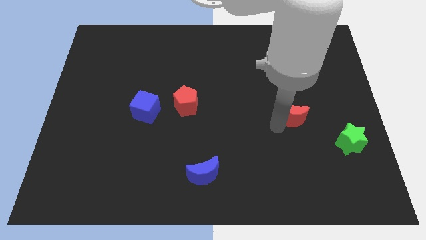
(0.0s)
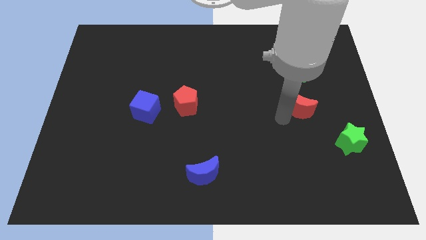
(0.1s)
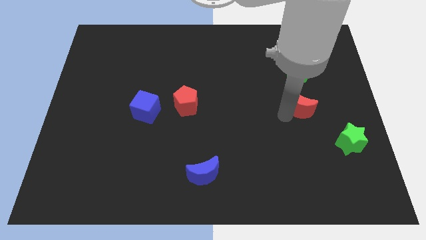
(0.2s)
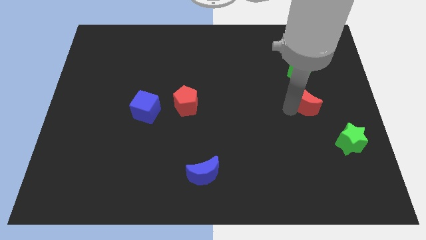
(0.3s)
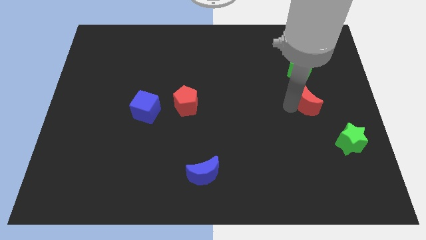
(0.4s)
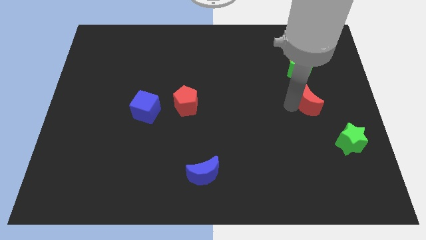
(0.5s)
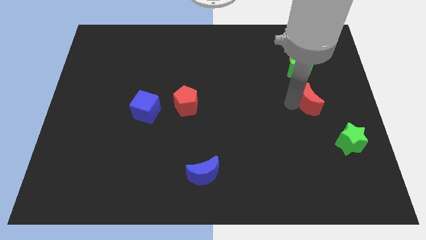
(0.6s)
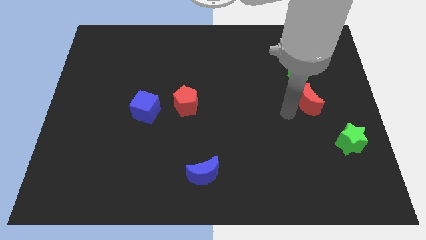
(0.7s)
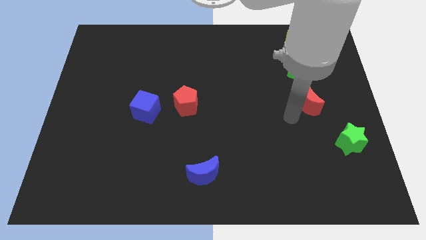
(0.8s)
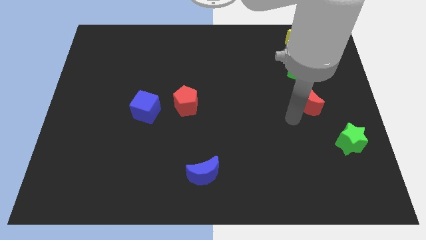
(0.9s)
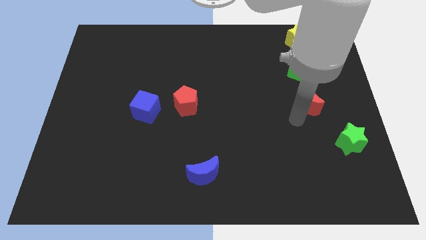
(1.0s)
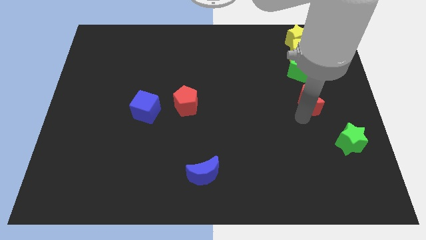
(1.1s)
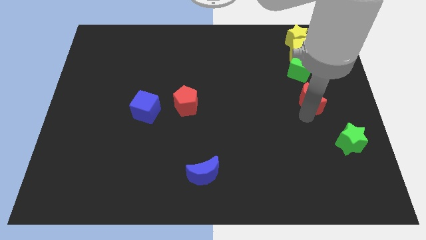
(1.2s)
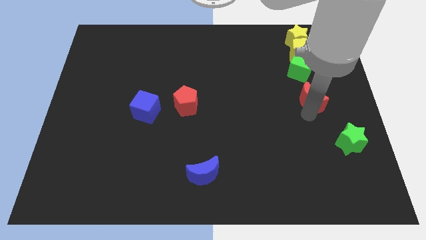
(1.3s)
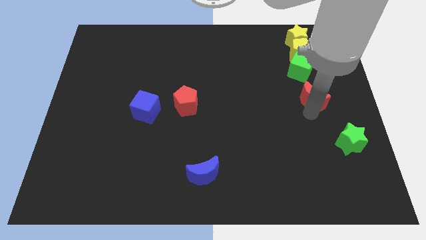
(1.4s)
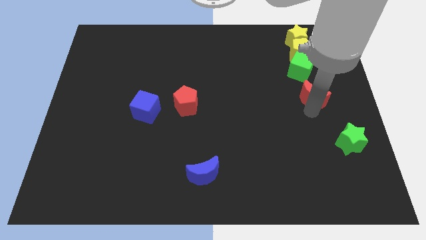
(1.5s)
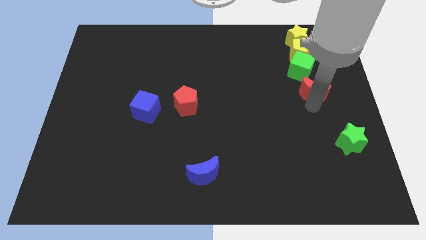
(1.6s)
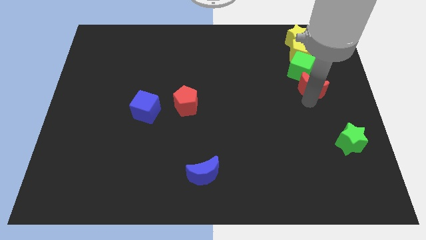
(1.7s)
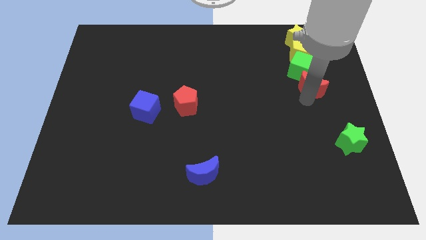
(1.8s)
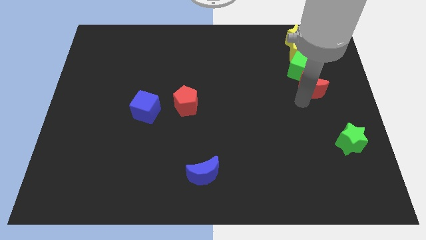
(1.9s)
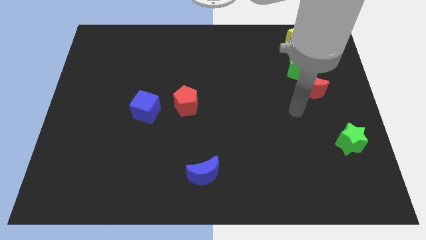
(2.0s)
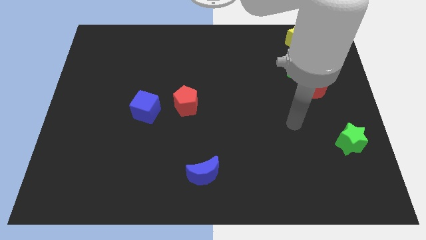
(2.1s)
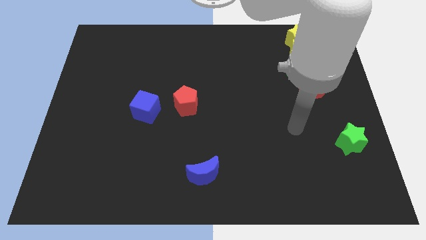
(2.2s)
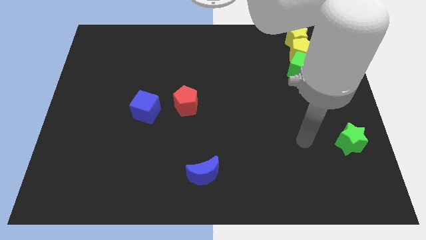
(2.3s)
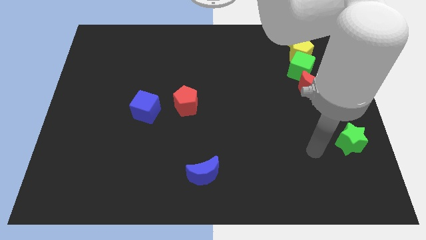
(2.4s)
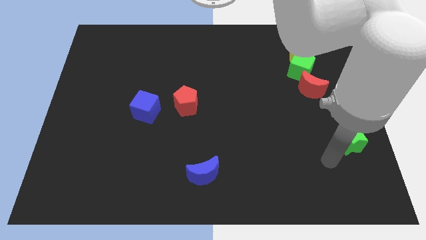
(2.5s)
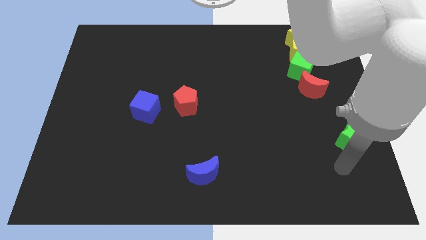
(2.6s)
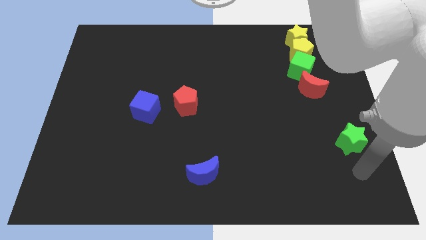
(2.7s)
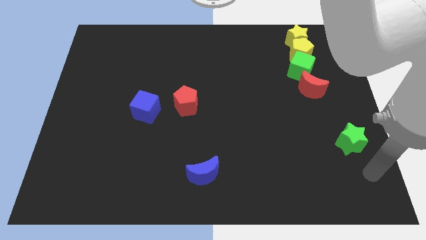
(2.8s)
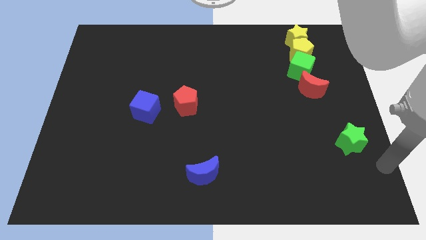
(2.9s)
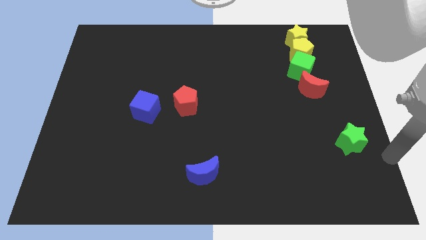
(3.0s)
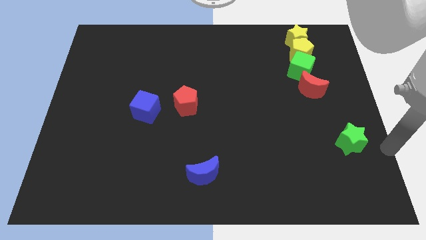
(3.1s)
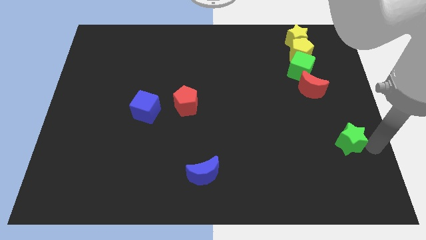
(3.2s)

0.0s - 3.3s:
push the red crescent into the green cube

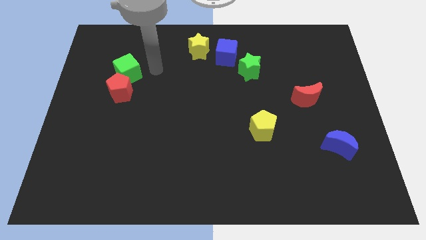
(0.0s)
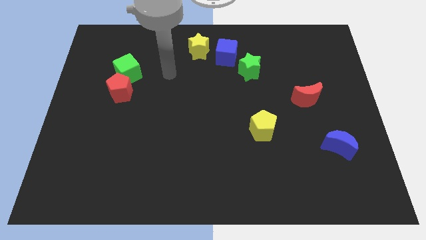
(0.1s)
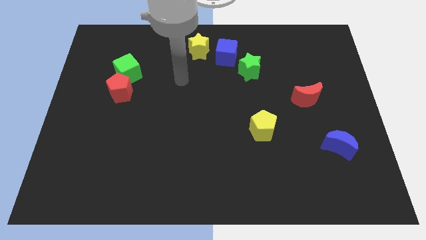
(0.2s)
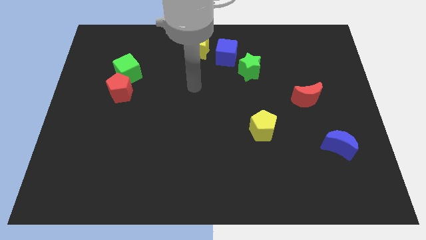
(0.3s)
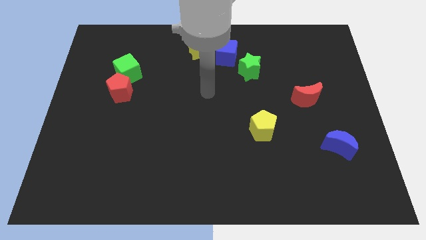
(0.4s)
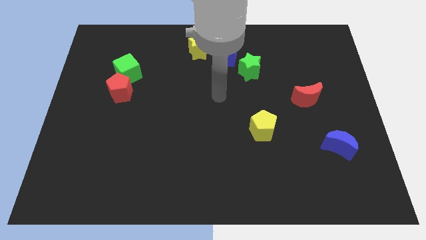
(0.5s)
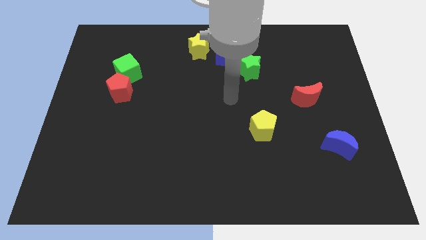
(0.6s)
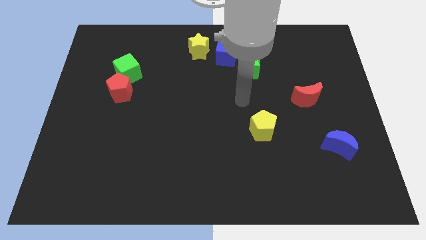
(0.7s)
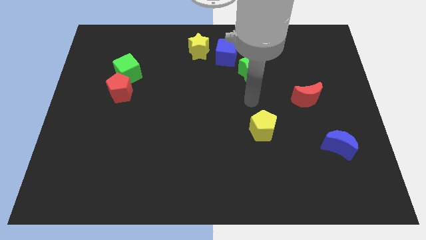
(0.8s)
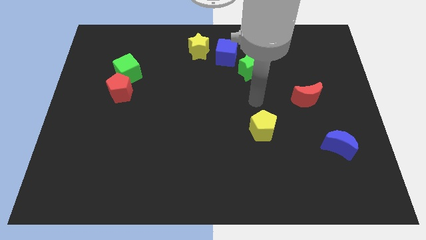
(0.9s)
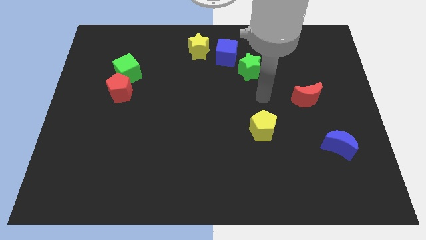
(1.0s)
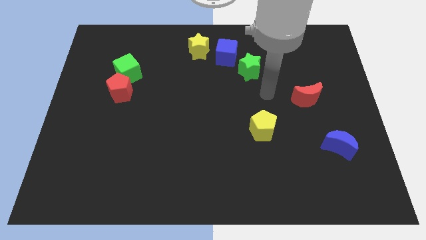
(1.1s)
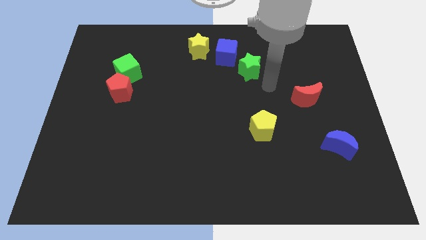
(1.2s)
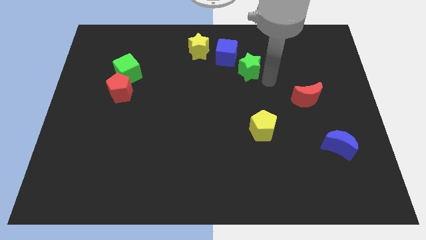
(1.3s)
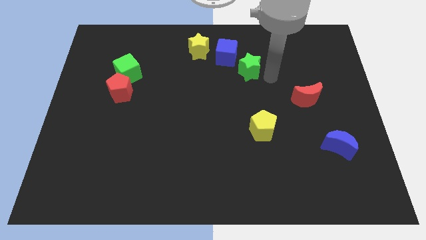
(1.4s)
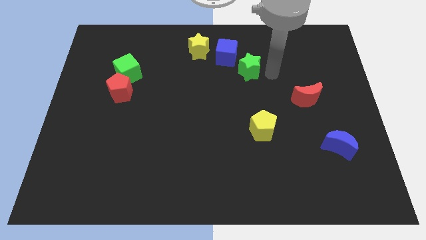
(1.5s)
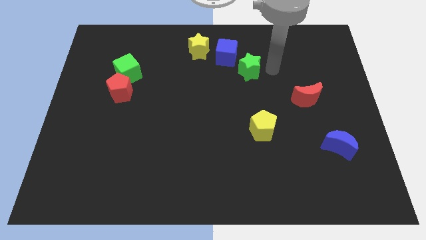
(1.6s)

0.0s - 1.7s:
point your hand at the right side of the green star

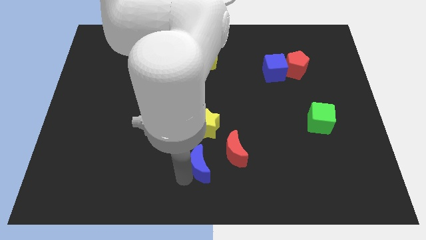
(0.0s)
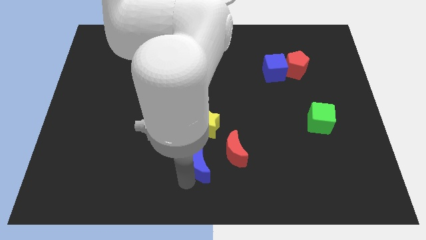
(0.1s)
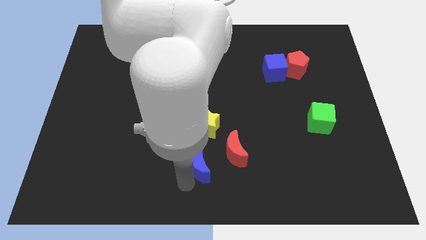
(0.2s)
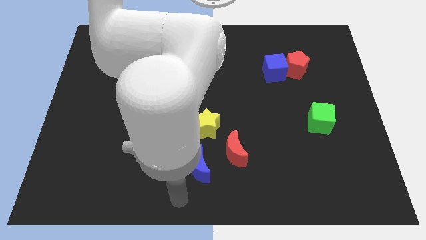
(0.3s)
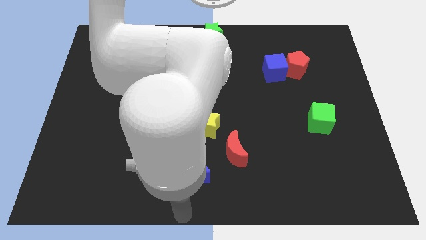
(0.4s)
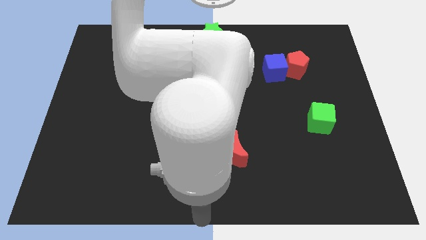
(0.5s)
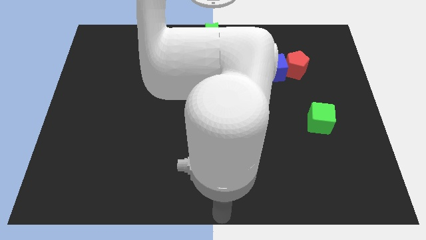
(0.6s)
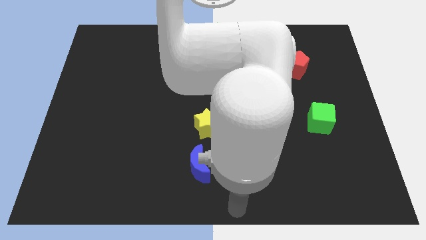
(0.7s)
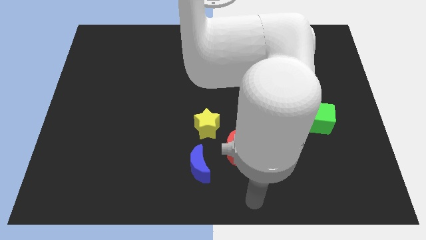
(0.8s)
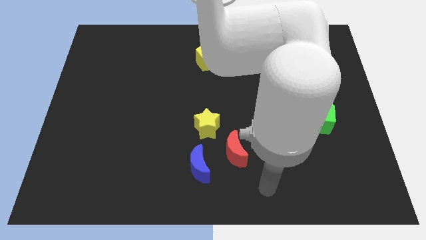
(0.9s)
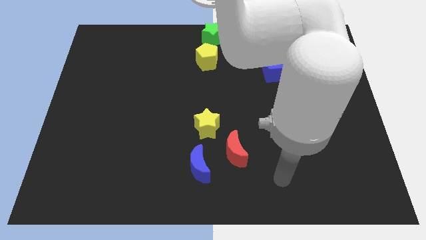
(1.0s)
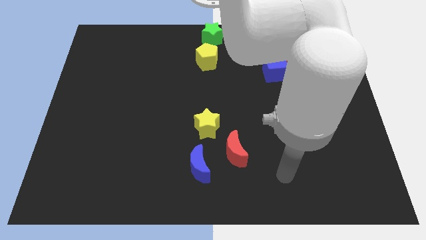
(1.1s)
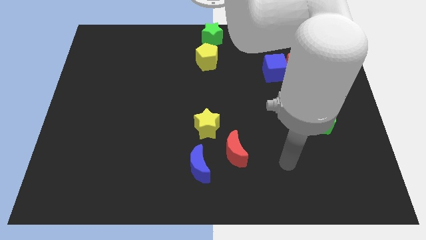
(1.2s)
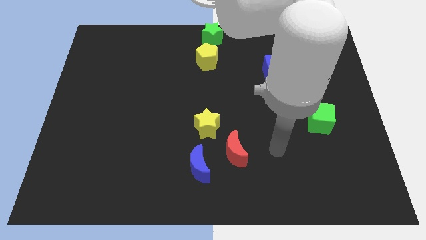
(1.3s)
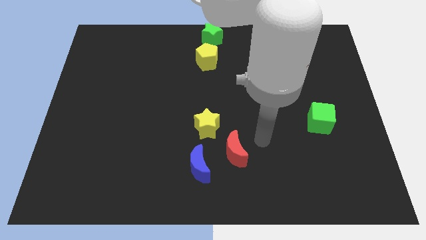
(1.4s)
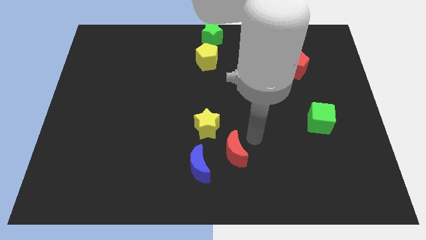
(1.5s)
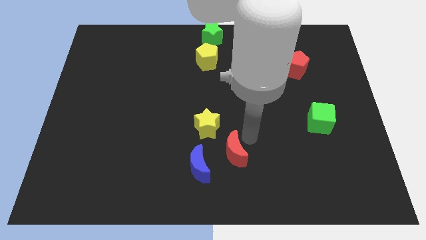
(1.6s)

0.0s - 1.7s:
move your arm around on the board

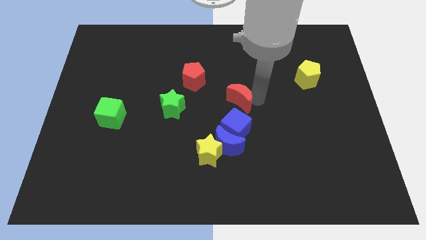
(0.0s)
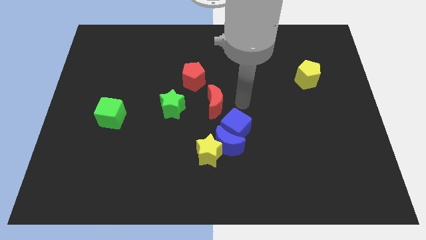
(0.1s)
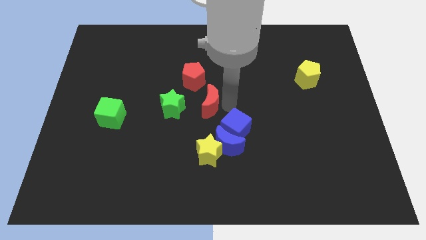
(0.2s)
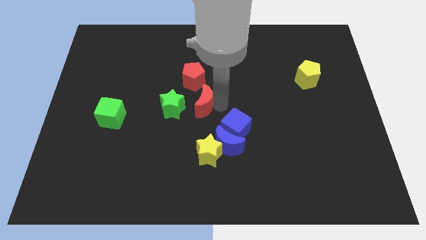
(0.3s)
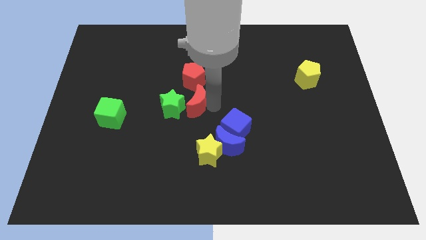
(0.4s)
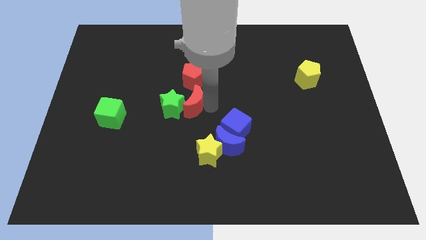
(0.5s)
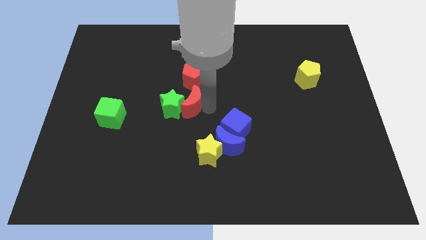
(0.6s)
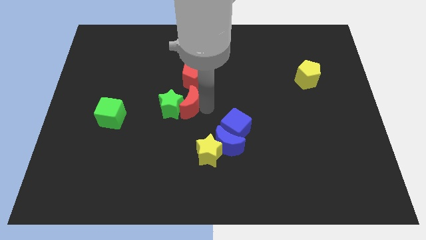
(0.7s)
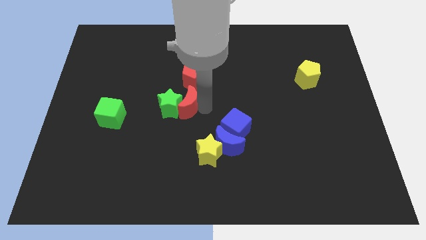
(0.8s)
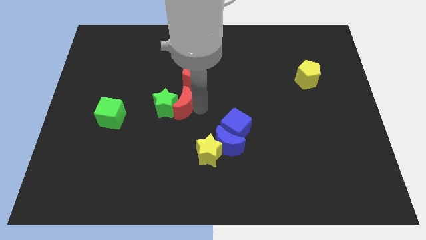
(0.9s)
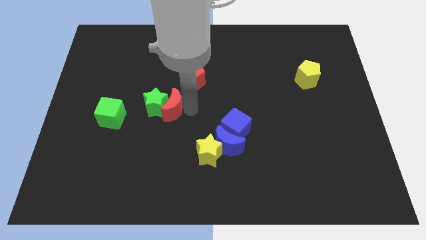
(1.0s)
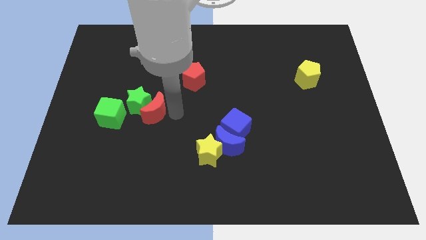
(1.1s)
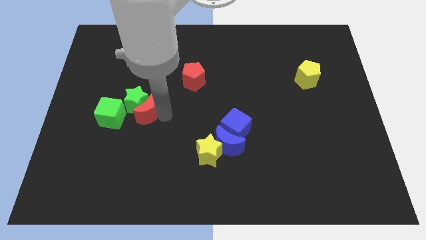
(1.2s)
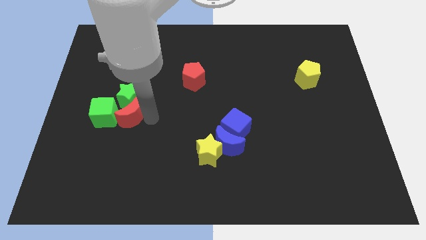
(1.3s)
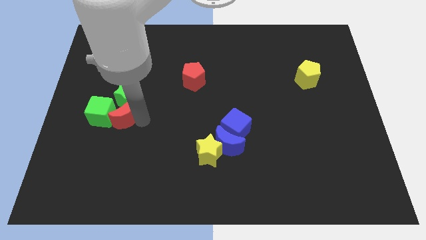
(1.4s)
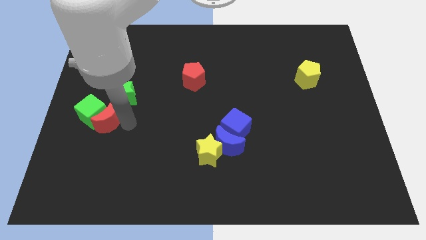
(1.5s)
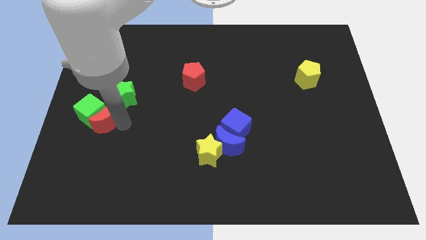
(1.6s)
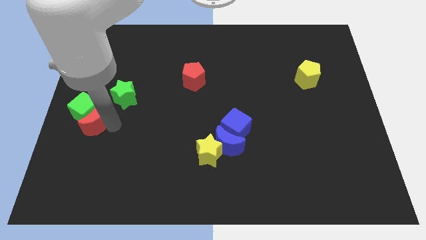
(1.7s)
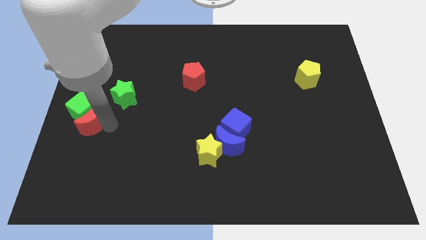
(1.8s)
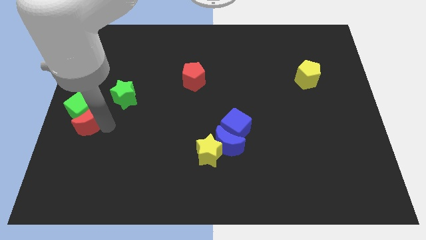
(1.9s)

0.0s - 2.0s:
move red moon into green cube

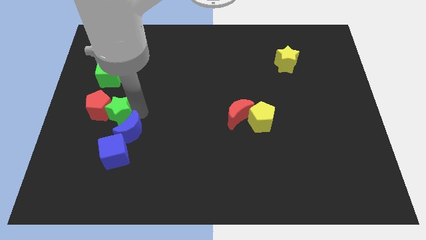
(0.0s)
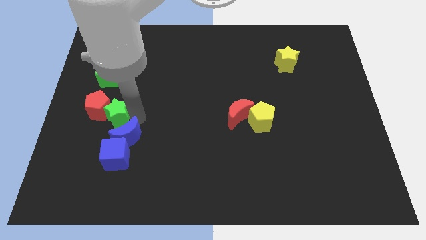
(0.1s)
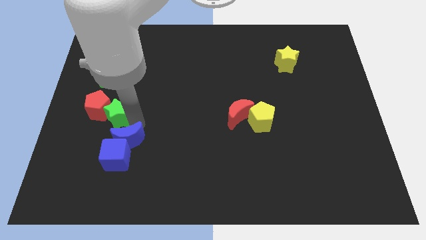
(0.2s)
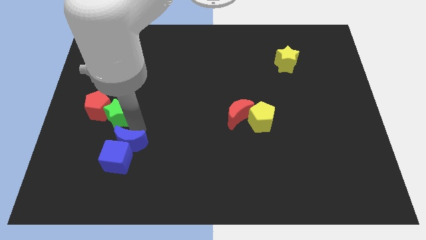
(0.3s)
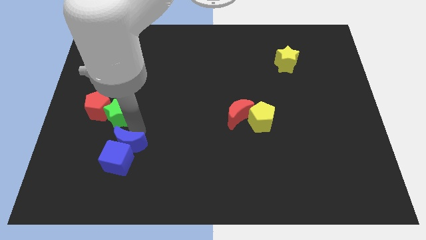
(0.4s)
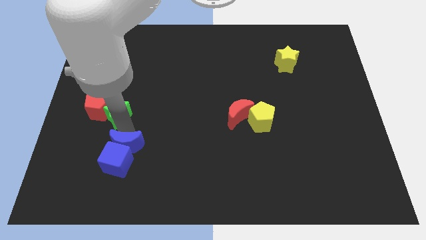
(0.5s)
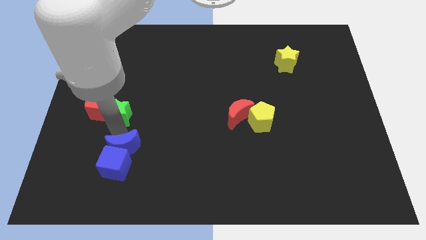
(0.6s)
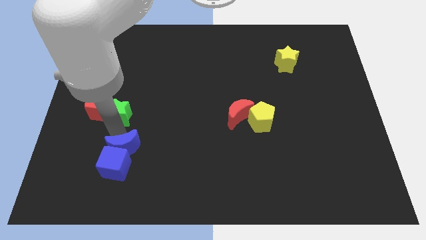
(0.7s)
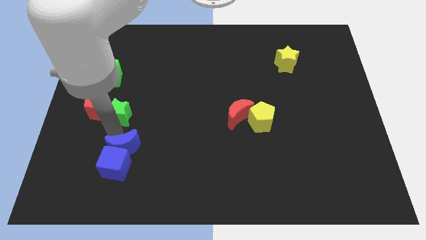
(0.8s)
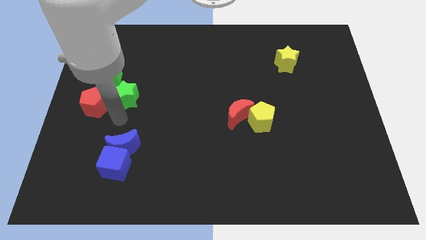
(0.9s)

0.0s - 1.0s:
separate blue moon from green star
